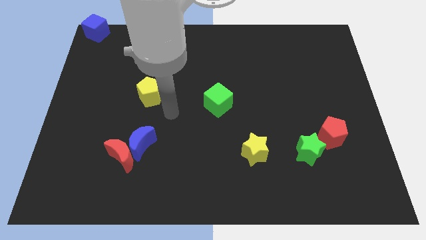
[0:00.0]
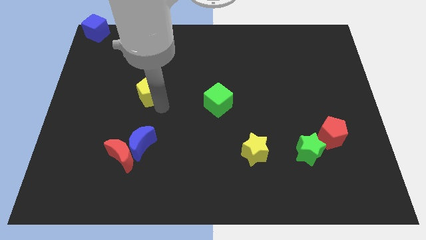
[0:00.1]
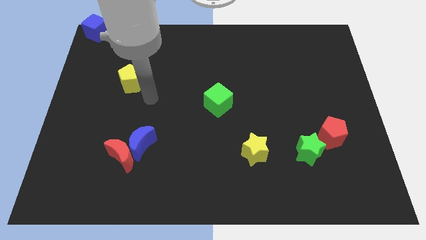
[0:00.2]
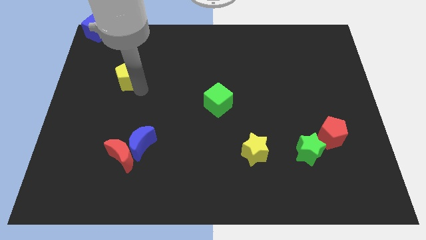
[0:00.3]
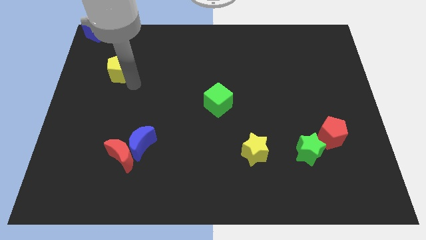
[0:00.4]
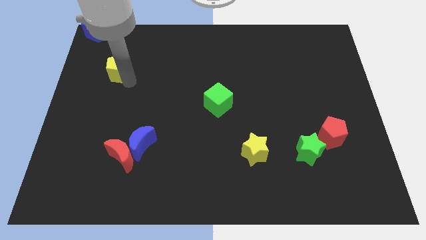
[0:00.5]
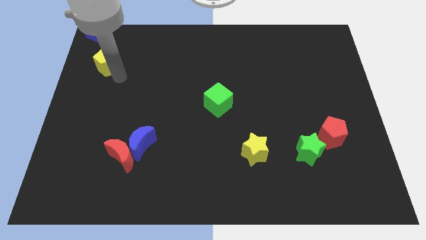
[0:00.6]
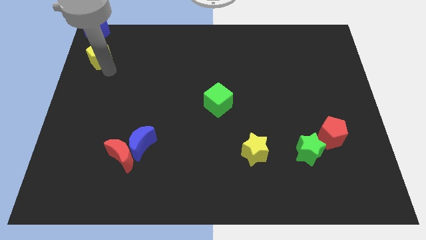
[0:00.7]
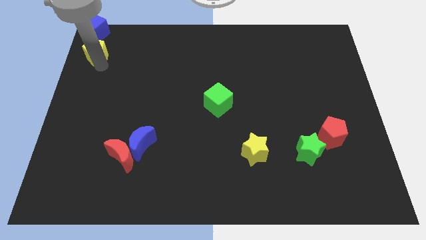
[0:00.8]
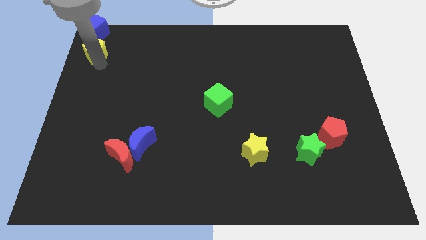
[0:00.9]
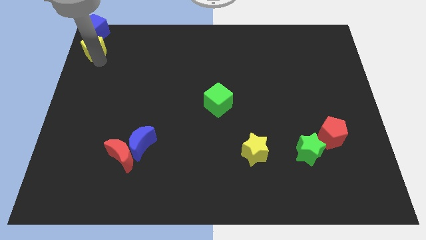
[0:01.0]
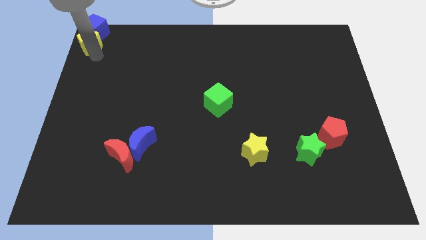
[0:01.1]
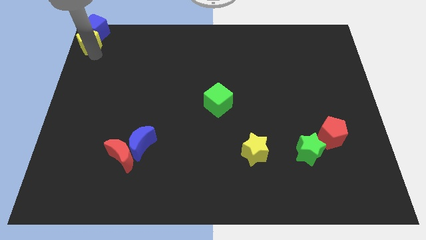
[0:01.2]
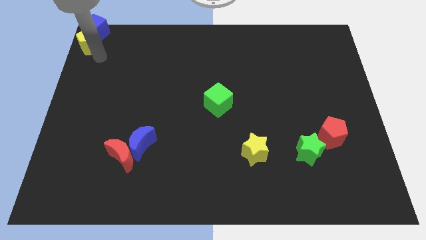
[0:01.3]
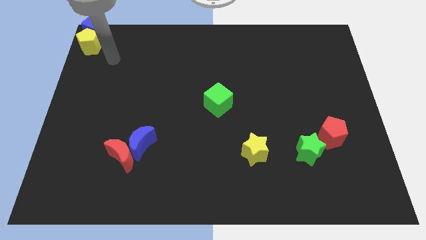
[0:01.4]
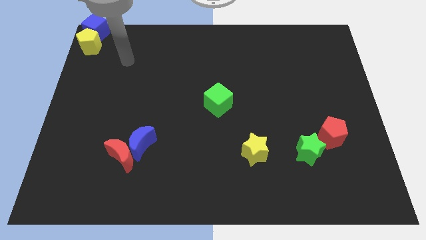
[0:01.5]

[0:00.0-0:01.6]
place the yellow pentagon below the blue cube

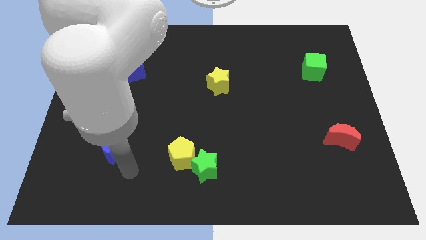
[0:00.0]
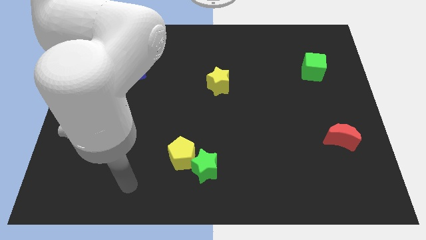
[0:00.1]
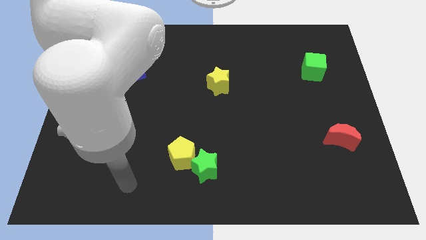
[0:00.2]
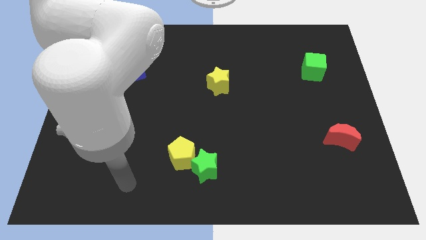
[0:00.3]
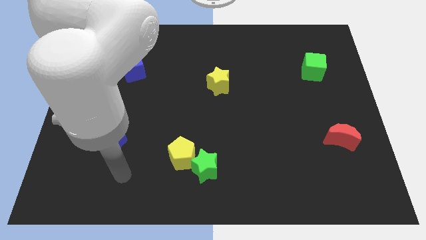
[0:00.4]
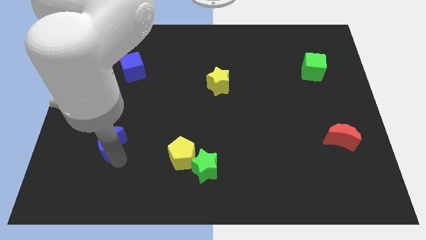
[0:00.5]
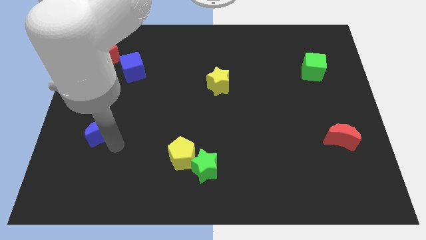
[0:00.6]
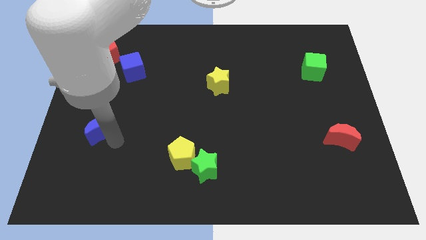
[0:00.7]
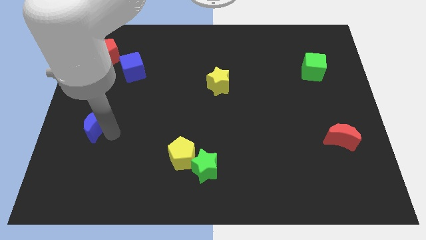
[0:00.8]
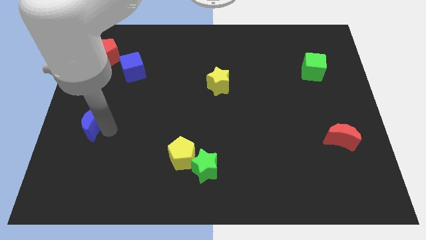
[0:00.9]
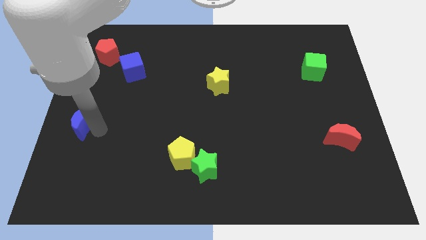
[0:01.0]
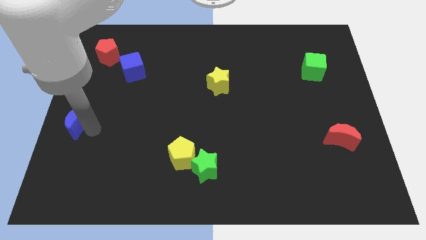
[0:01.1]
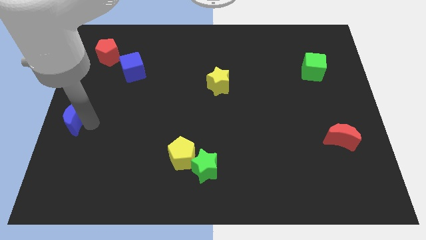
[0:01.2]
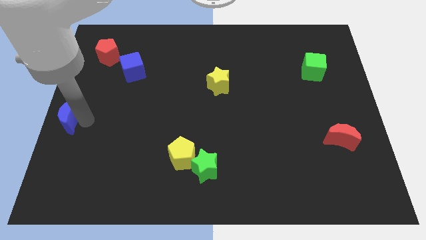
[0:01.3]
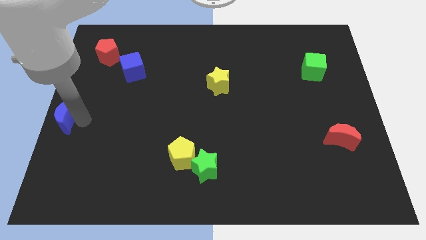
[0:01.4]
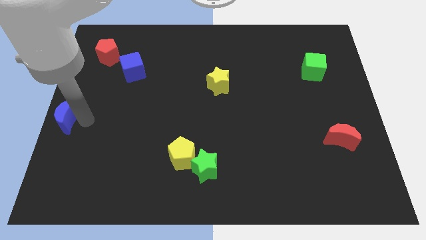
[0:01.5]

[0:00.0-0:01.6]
drag the blue moon to the left side of the board

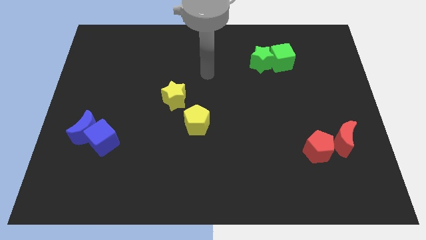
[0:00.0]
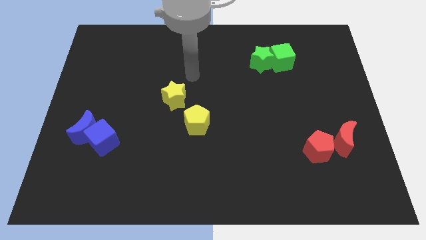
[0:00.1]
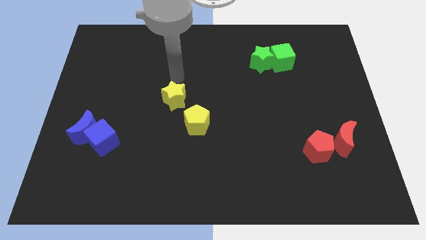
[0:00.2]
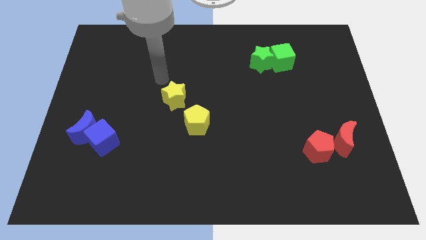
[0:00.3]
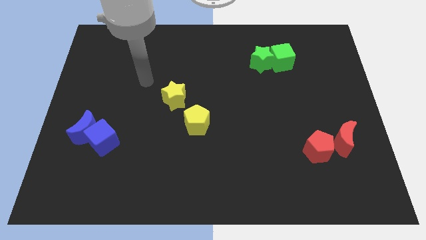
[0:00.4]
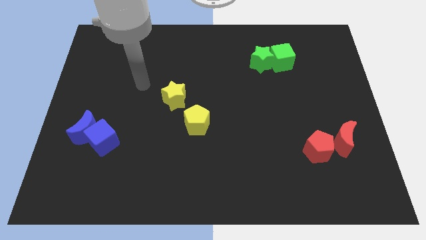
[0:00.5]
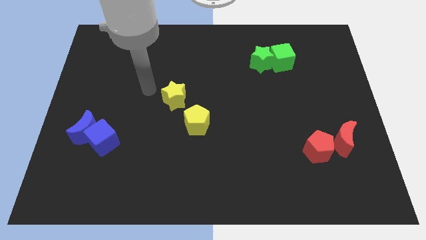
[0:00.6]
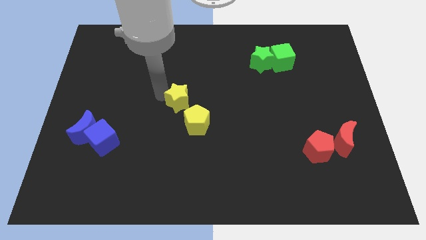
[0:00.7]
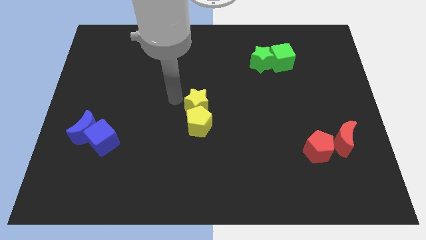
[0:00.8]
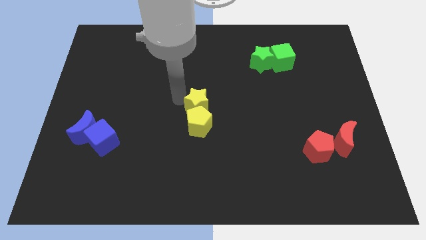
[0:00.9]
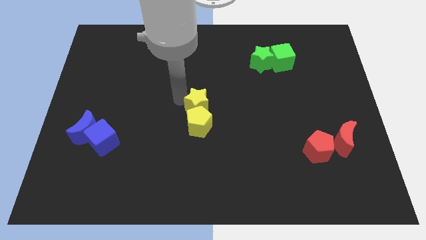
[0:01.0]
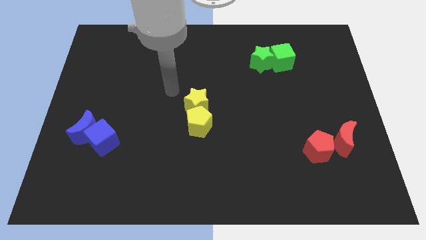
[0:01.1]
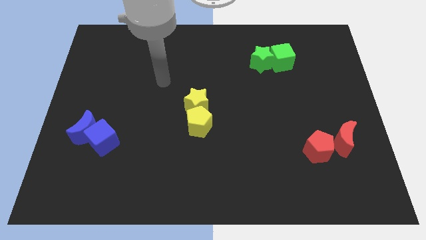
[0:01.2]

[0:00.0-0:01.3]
push the yellow star into the yellow pentagon

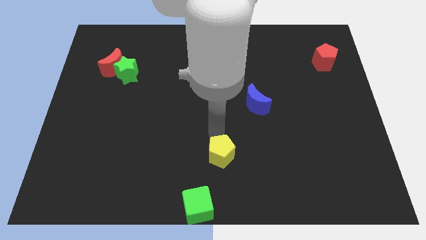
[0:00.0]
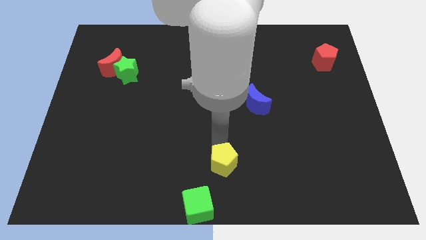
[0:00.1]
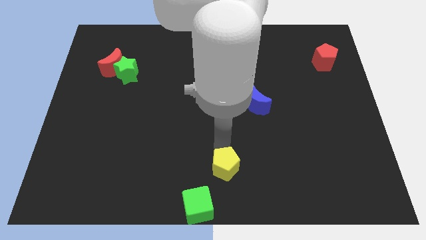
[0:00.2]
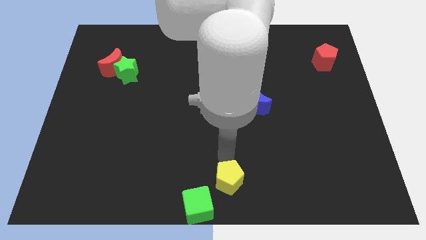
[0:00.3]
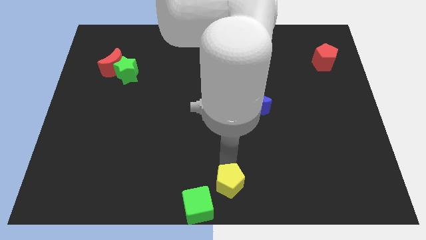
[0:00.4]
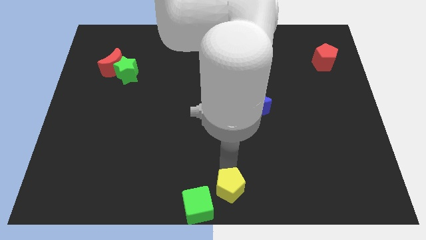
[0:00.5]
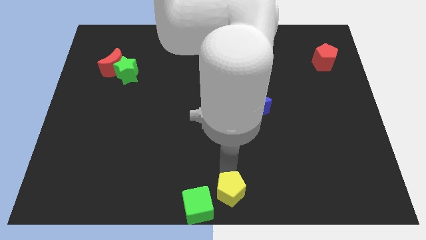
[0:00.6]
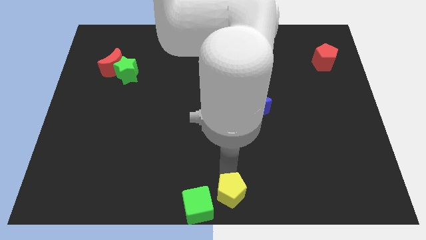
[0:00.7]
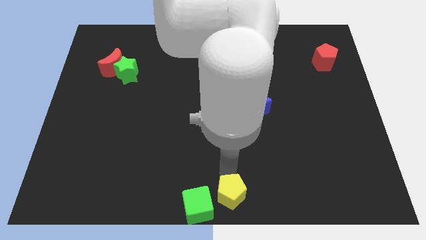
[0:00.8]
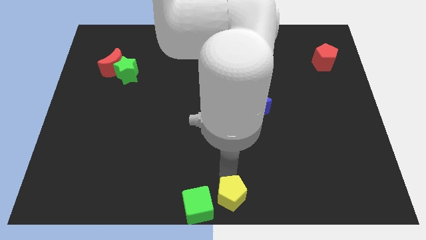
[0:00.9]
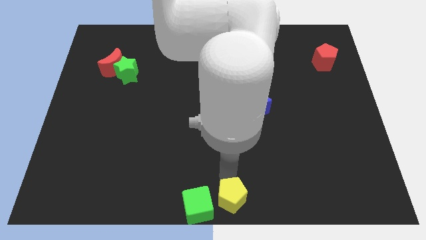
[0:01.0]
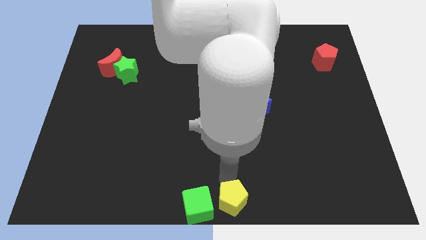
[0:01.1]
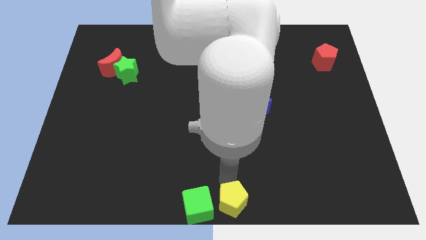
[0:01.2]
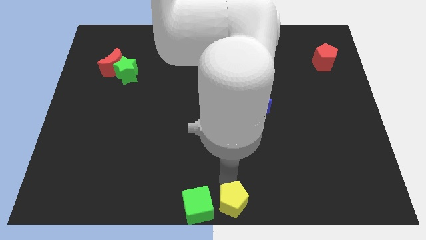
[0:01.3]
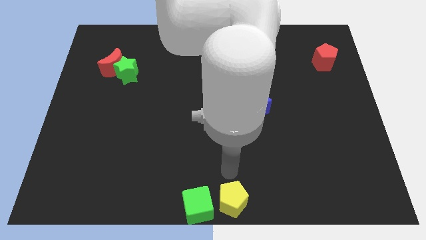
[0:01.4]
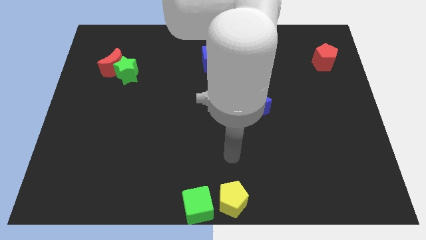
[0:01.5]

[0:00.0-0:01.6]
push the yellow pentagon to the right of the green cube

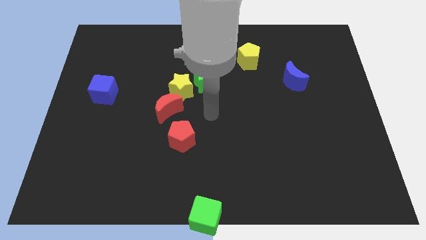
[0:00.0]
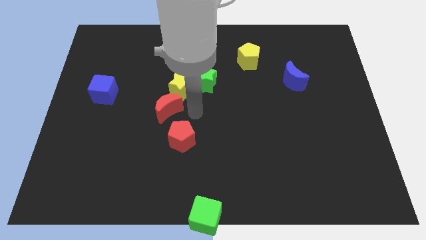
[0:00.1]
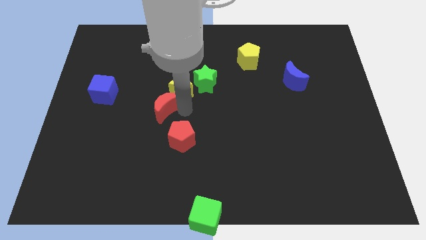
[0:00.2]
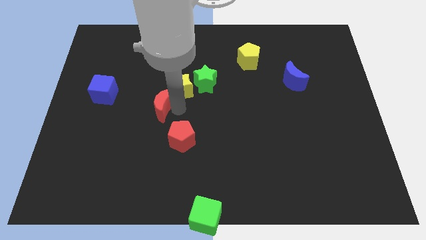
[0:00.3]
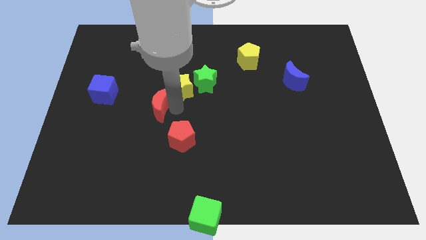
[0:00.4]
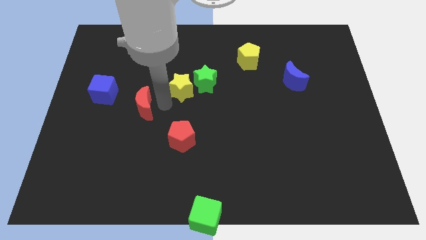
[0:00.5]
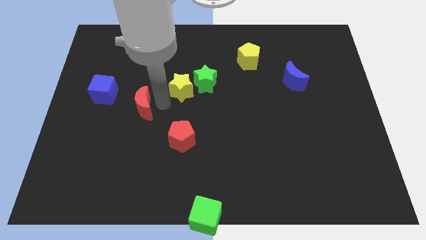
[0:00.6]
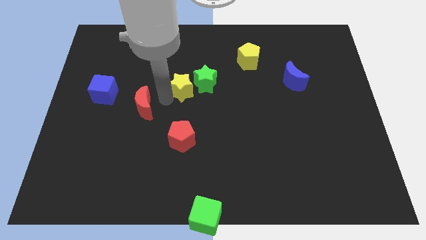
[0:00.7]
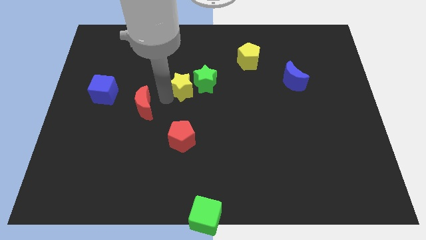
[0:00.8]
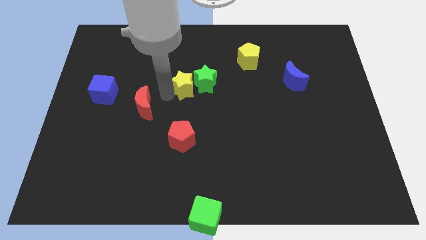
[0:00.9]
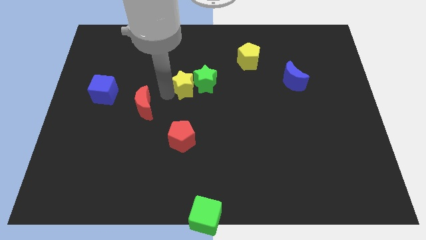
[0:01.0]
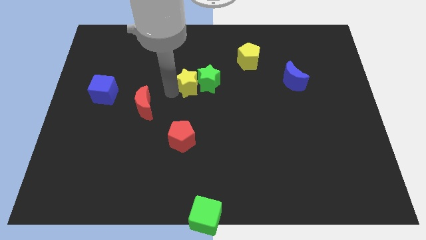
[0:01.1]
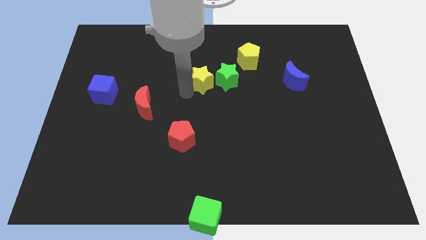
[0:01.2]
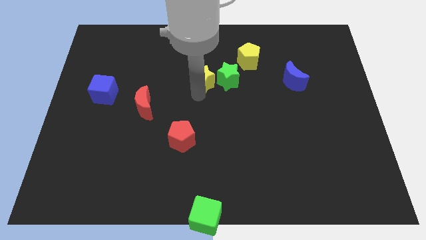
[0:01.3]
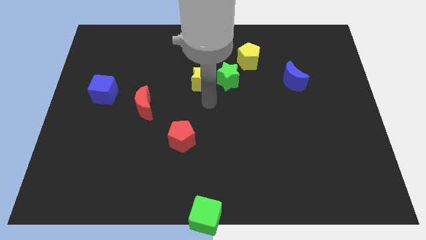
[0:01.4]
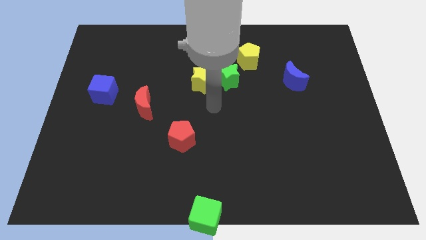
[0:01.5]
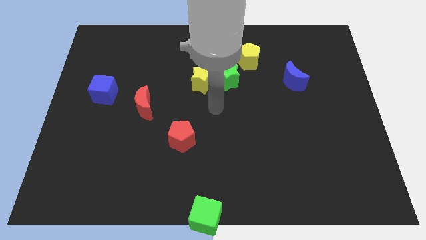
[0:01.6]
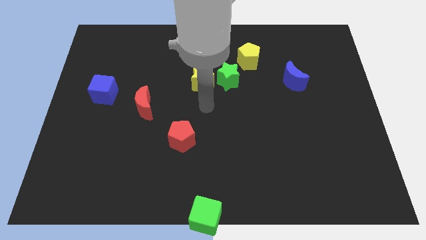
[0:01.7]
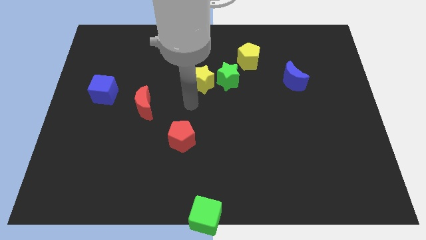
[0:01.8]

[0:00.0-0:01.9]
move the red moon and the yellow star away from each other

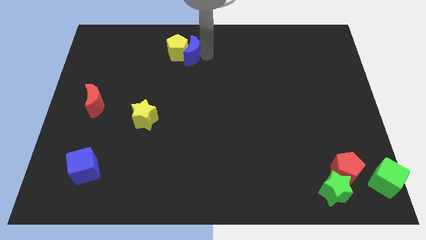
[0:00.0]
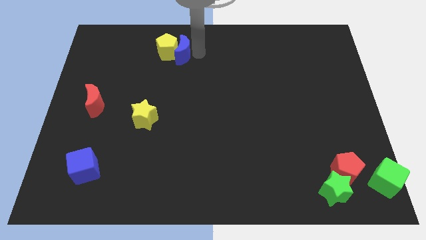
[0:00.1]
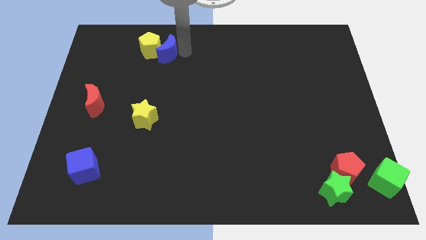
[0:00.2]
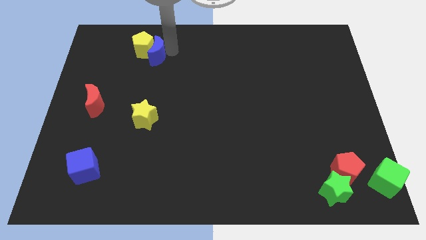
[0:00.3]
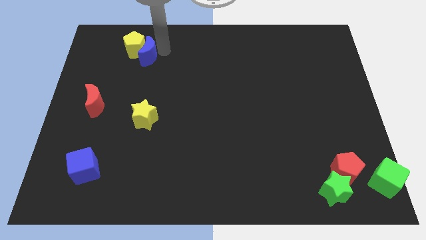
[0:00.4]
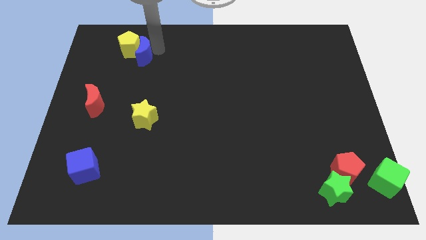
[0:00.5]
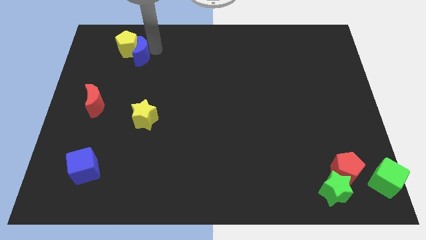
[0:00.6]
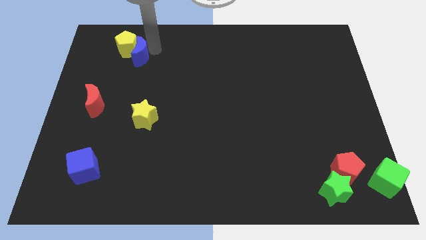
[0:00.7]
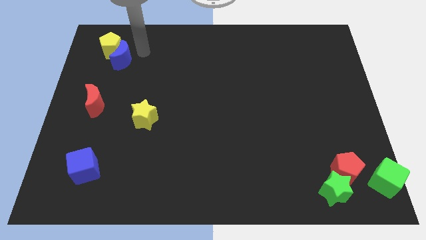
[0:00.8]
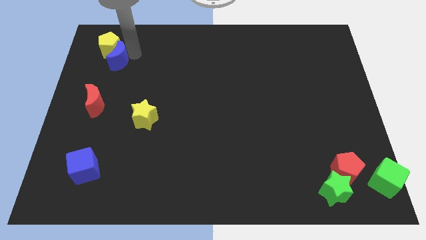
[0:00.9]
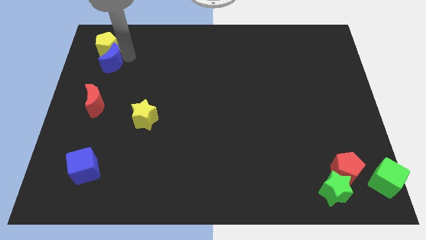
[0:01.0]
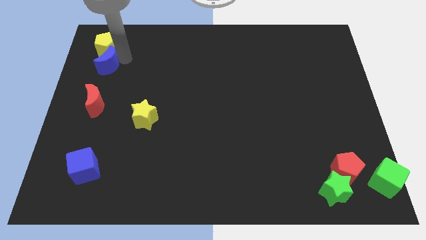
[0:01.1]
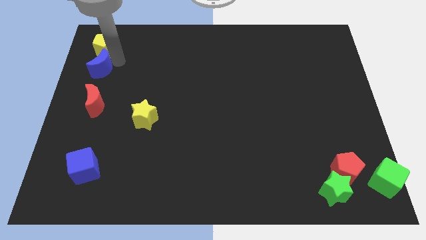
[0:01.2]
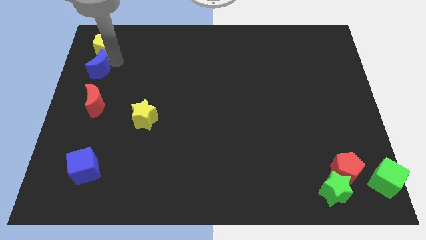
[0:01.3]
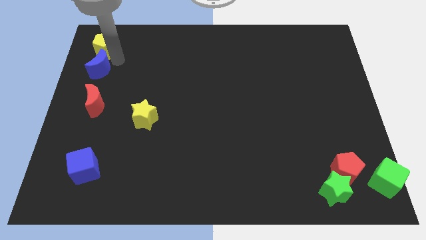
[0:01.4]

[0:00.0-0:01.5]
push the blue crescent along with the yellow pentagon to the top left
